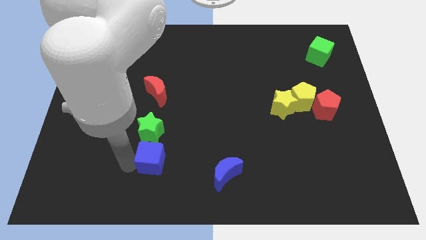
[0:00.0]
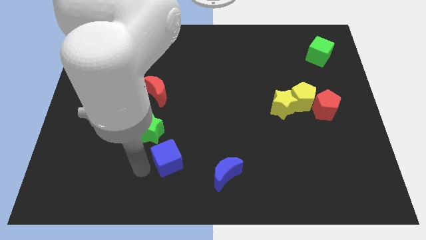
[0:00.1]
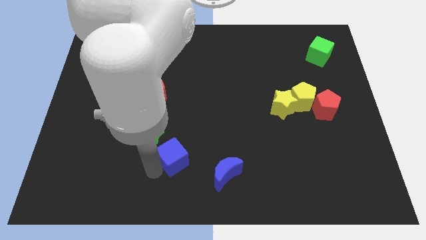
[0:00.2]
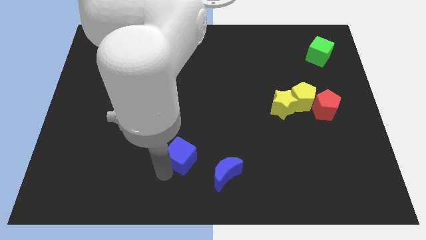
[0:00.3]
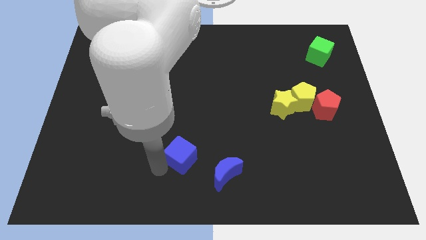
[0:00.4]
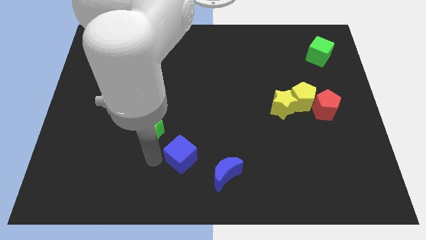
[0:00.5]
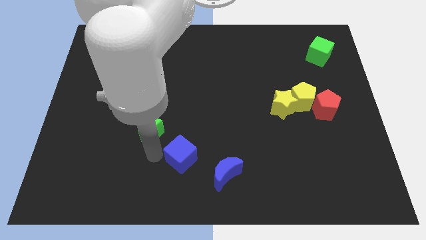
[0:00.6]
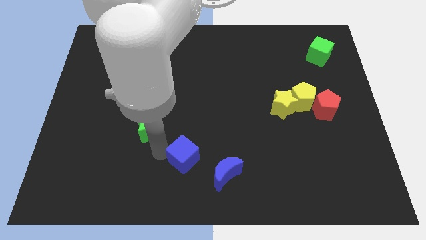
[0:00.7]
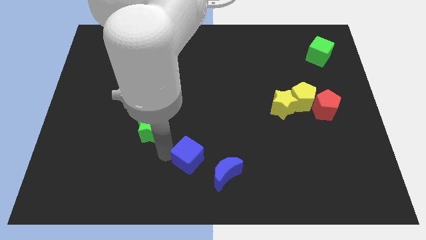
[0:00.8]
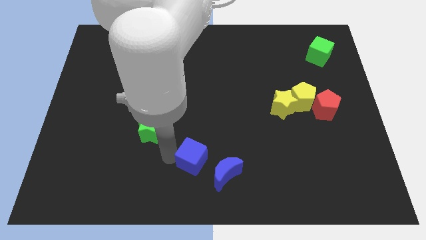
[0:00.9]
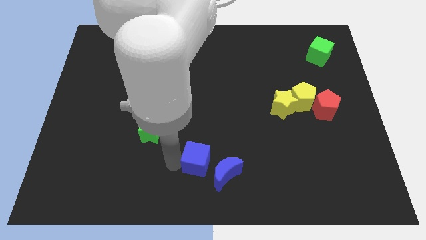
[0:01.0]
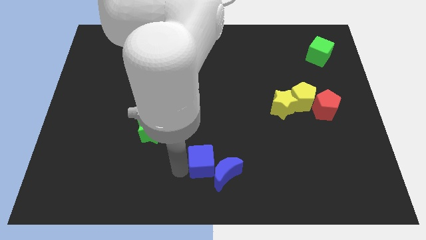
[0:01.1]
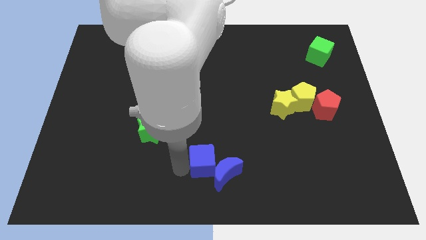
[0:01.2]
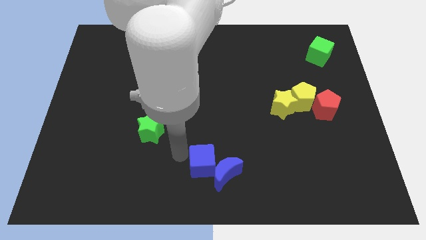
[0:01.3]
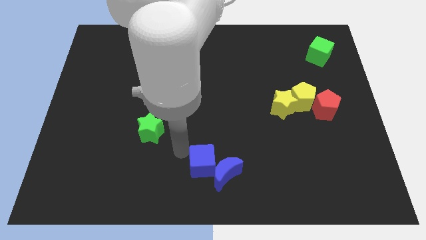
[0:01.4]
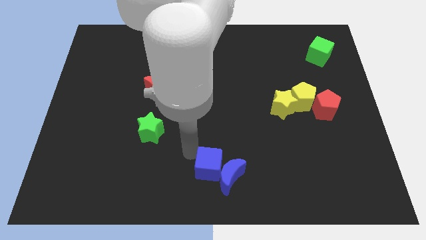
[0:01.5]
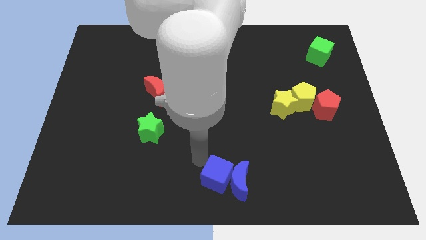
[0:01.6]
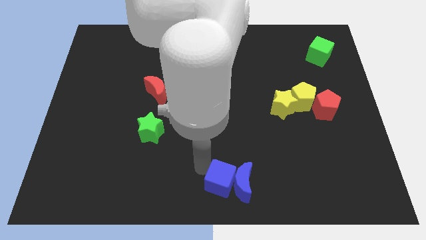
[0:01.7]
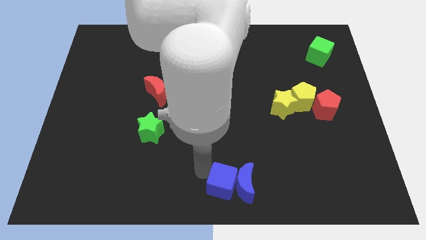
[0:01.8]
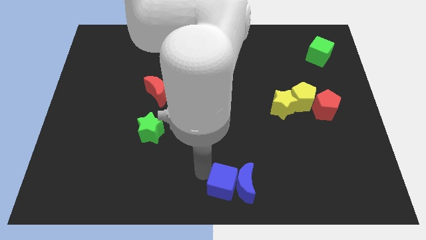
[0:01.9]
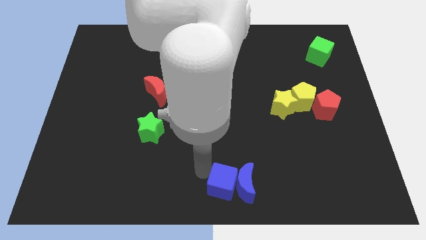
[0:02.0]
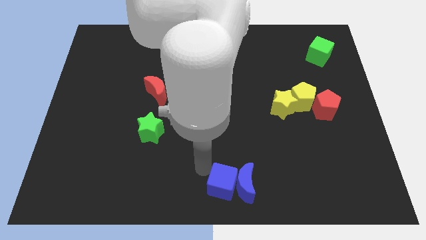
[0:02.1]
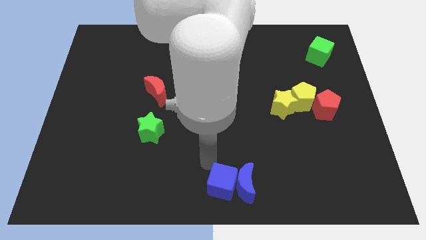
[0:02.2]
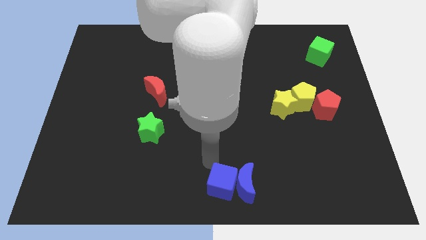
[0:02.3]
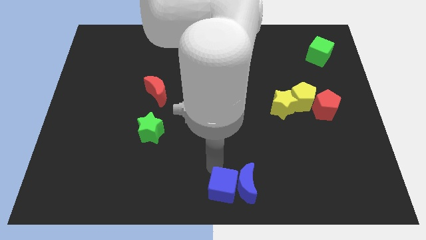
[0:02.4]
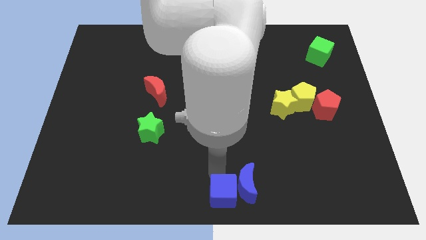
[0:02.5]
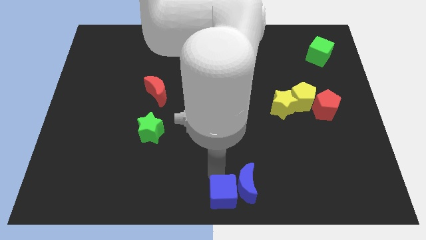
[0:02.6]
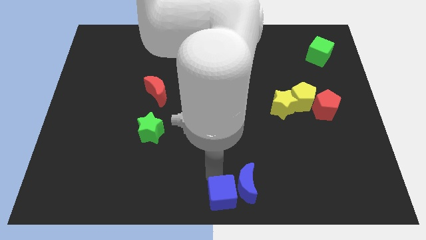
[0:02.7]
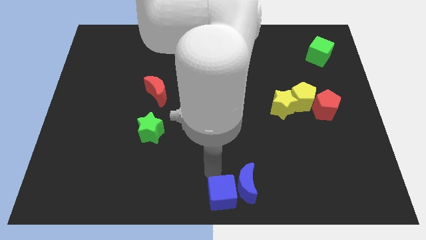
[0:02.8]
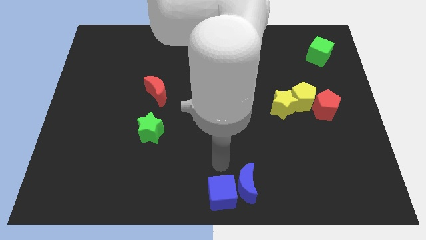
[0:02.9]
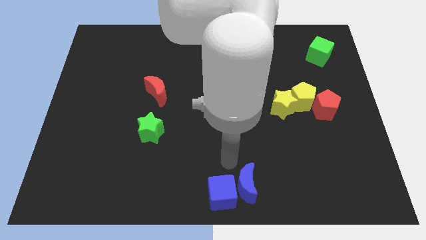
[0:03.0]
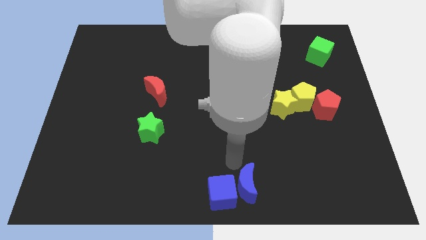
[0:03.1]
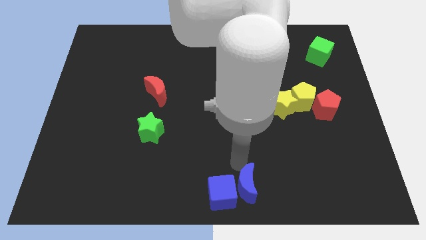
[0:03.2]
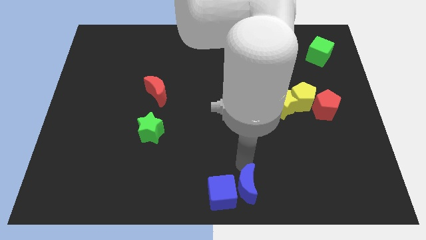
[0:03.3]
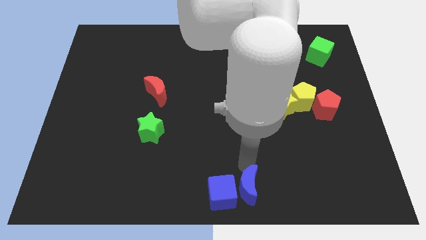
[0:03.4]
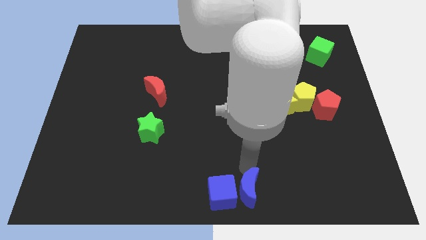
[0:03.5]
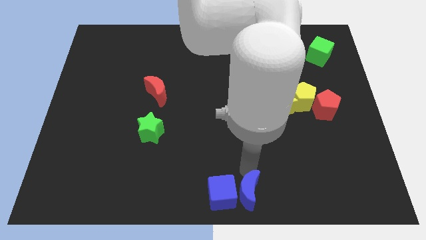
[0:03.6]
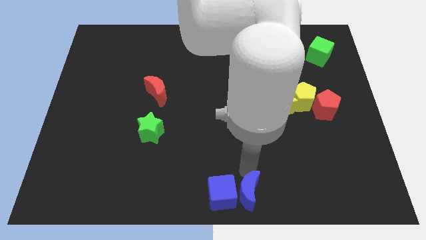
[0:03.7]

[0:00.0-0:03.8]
push blue cube red moon to the bottom center

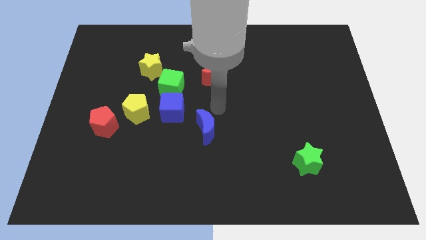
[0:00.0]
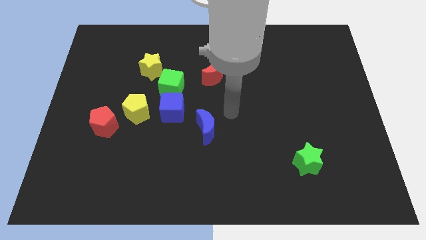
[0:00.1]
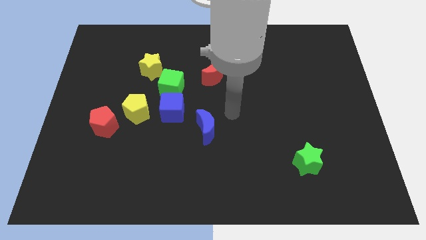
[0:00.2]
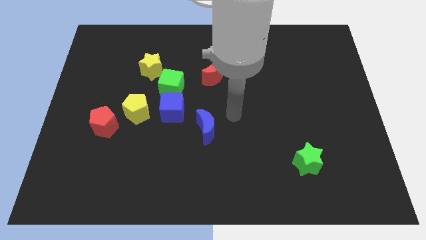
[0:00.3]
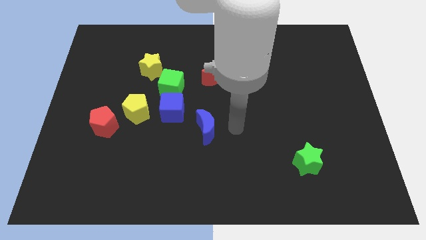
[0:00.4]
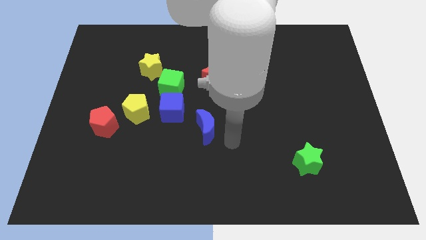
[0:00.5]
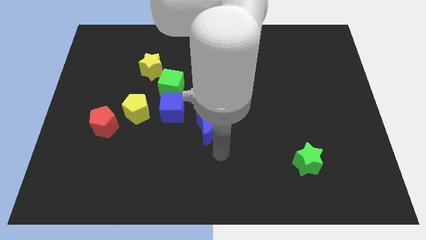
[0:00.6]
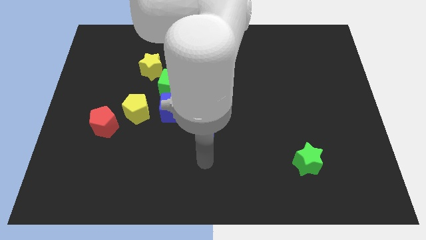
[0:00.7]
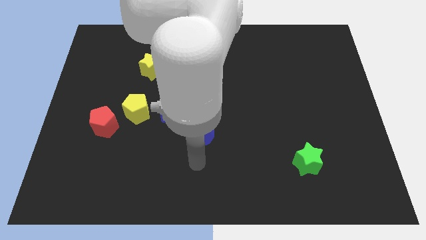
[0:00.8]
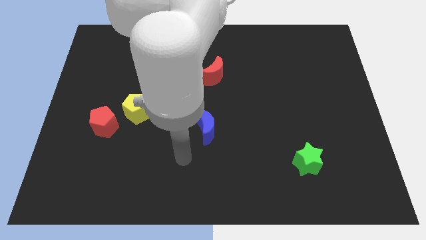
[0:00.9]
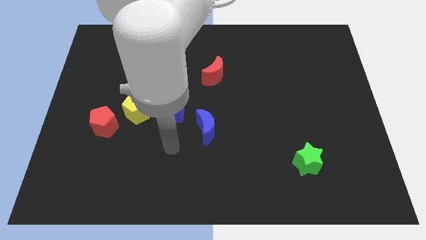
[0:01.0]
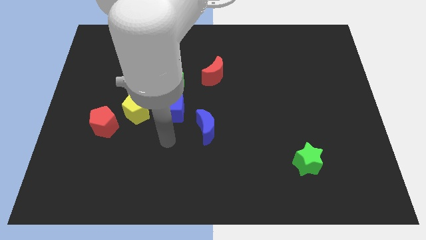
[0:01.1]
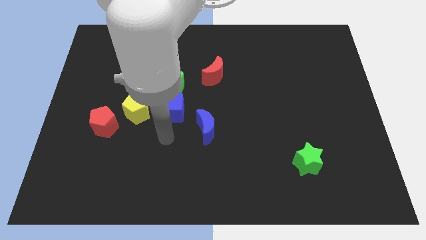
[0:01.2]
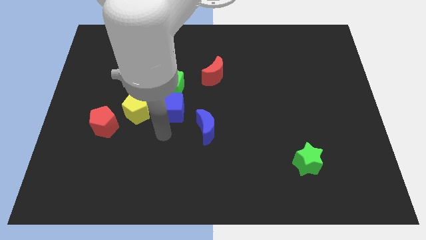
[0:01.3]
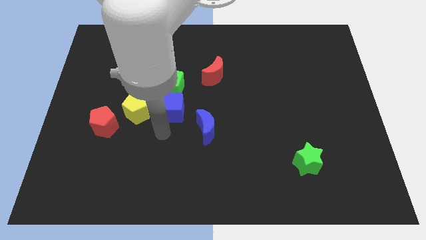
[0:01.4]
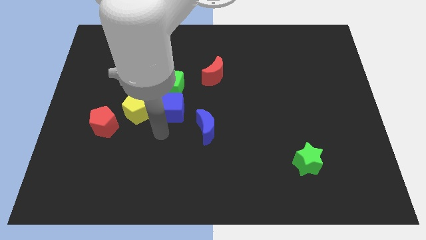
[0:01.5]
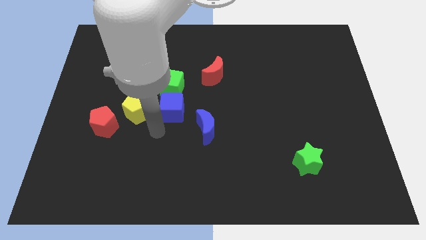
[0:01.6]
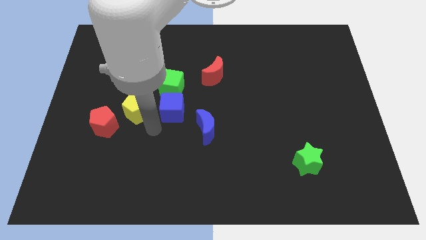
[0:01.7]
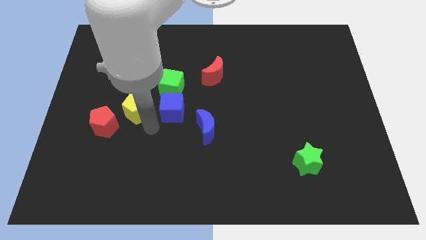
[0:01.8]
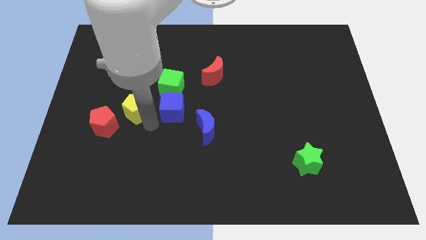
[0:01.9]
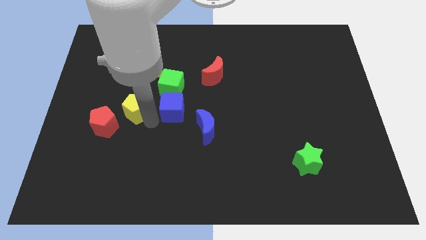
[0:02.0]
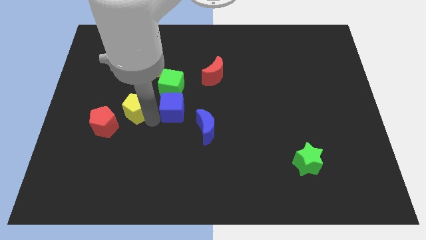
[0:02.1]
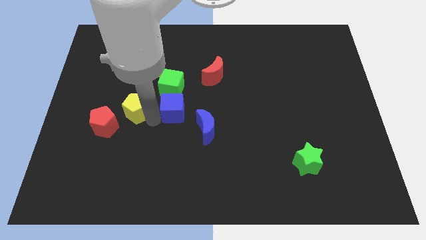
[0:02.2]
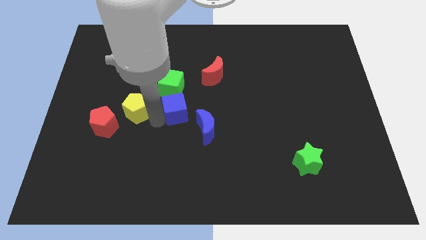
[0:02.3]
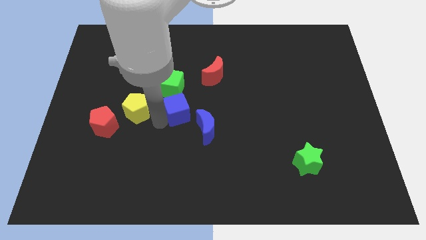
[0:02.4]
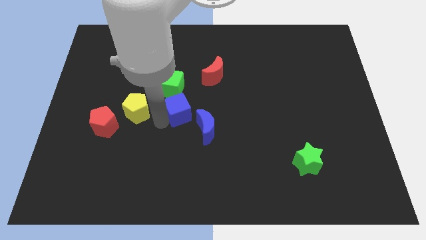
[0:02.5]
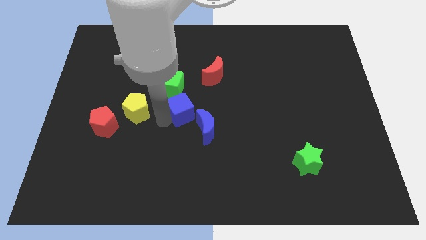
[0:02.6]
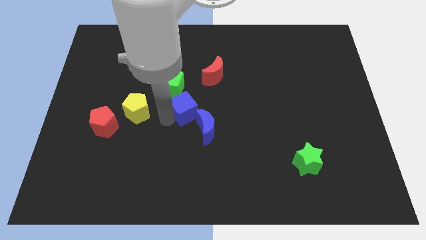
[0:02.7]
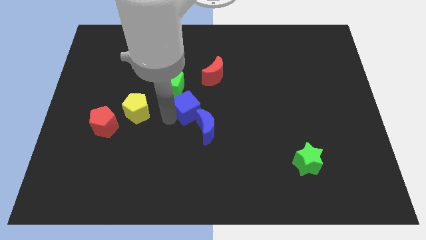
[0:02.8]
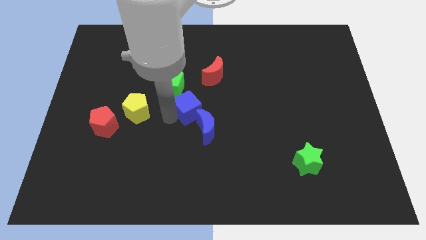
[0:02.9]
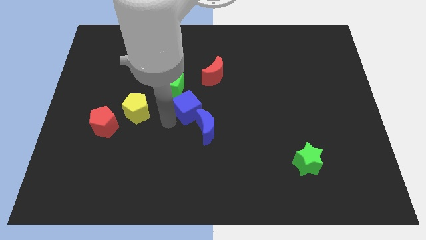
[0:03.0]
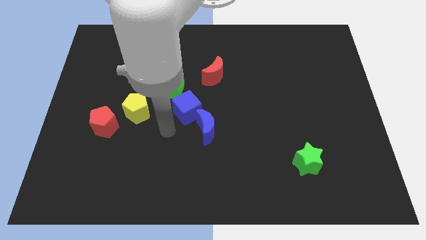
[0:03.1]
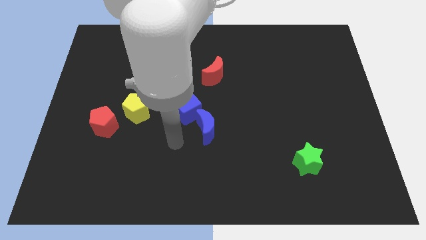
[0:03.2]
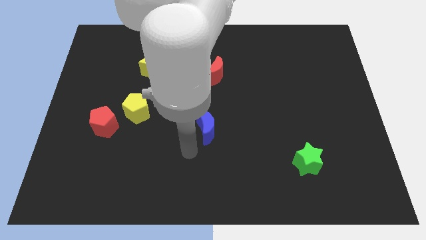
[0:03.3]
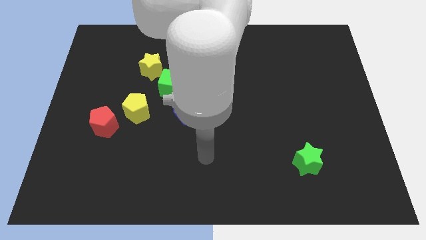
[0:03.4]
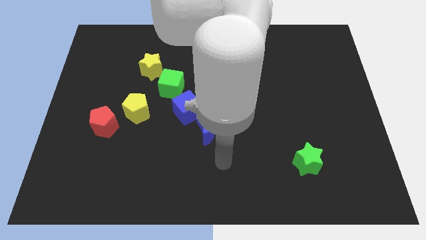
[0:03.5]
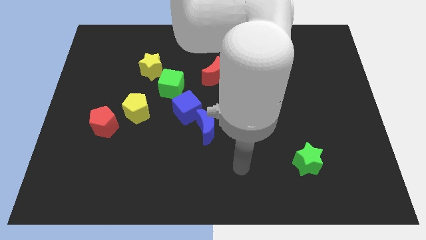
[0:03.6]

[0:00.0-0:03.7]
slightly place the blue cube towards right

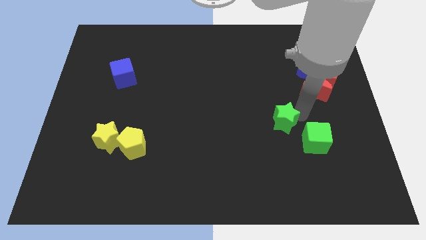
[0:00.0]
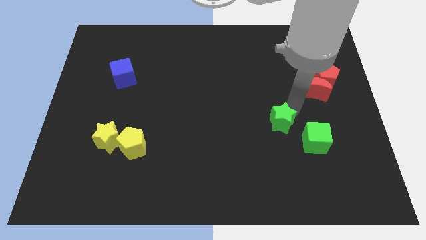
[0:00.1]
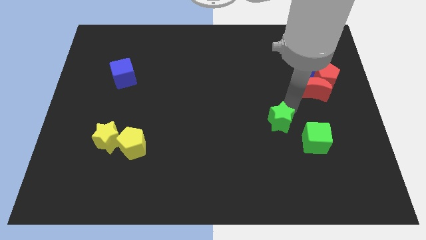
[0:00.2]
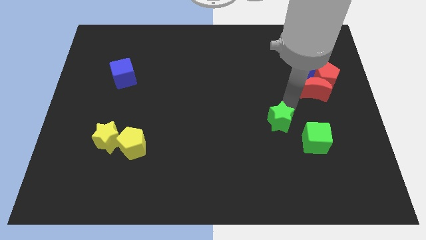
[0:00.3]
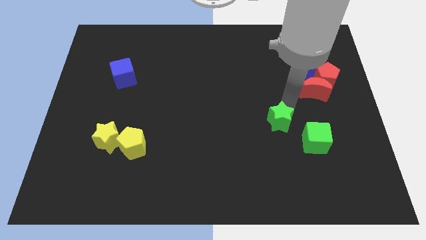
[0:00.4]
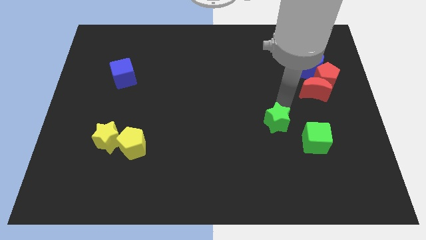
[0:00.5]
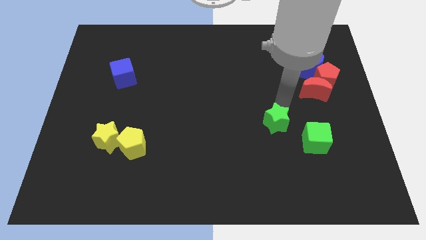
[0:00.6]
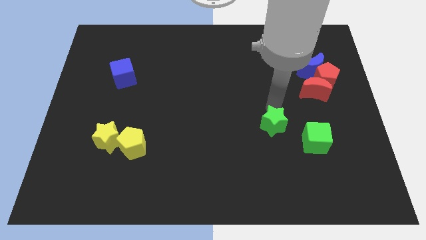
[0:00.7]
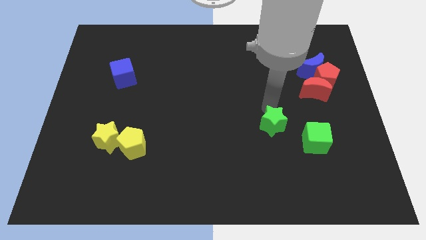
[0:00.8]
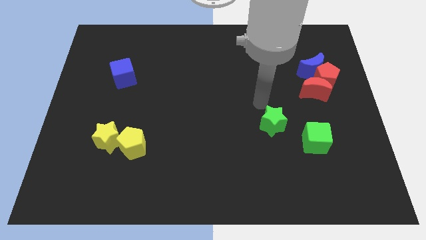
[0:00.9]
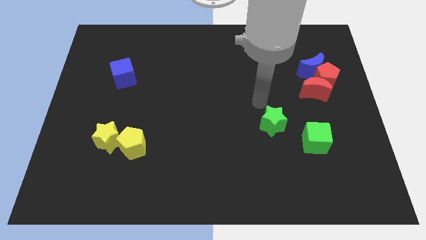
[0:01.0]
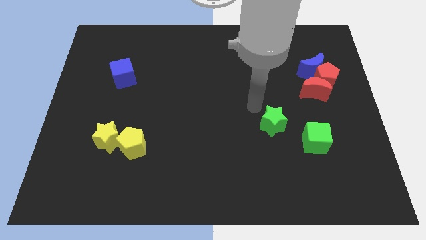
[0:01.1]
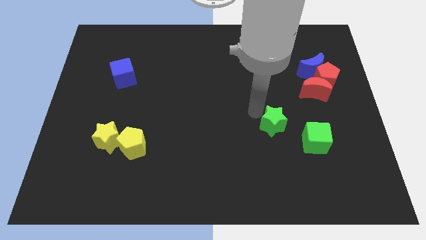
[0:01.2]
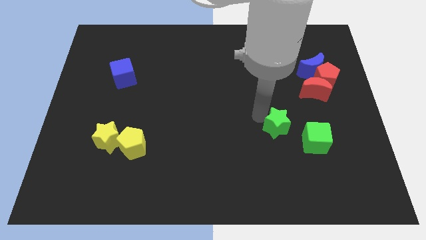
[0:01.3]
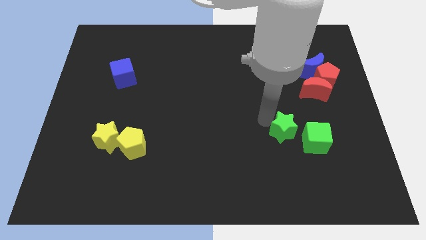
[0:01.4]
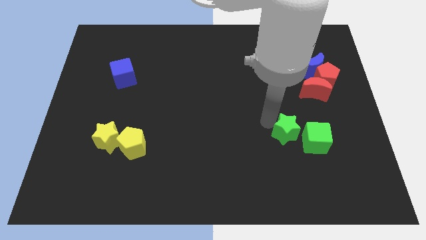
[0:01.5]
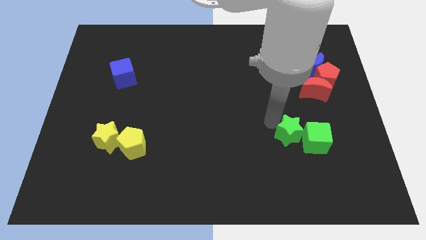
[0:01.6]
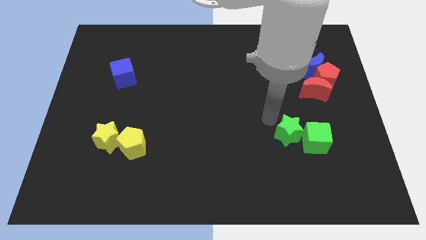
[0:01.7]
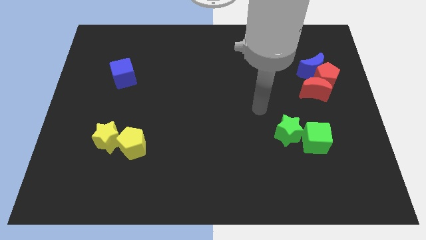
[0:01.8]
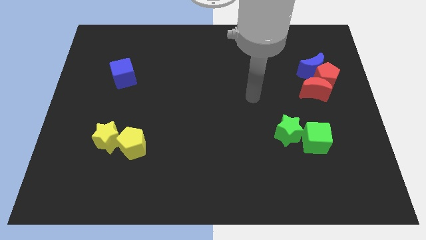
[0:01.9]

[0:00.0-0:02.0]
place the green star left to the green cube
